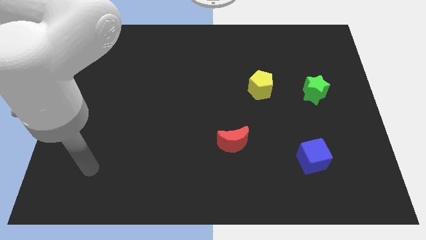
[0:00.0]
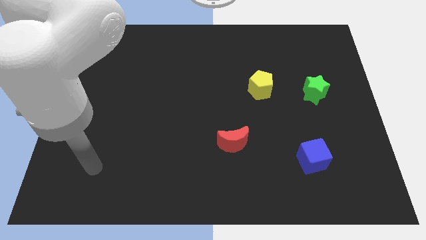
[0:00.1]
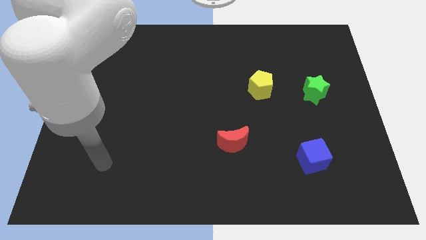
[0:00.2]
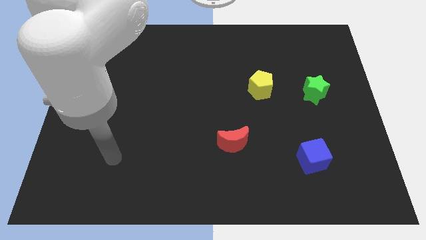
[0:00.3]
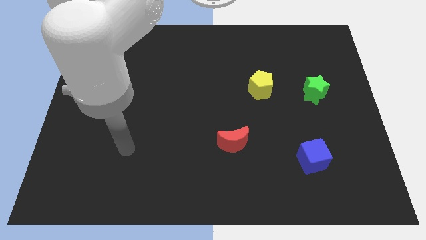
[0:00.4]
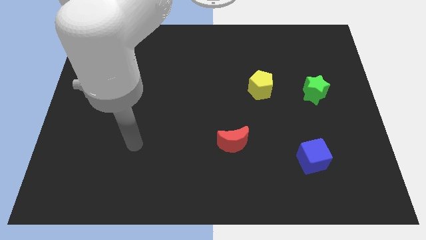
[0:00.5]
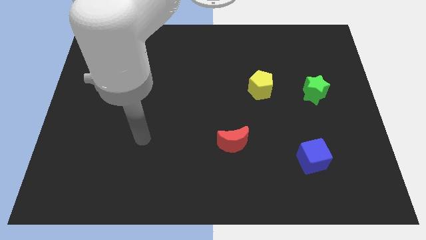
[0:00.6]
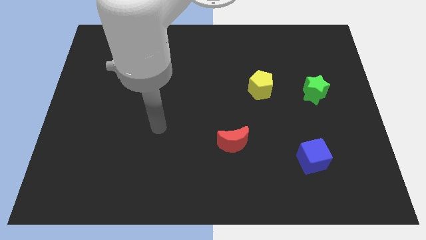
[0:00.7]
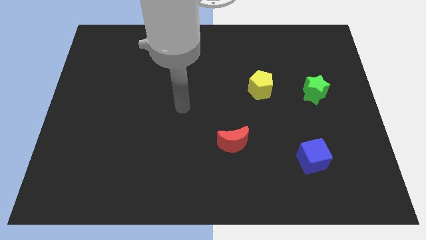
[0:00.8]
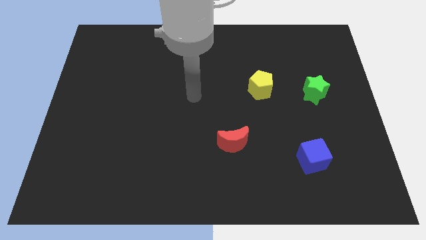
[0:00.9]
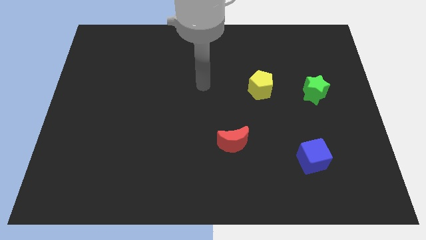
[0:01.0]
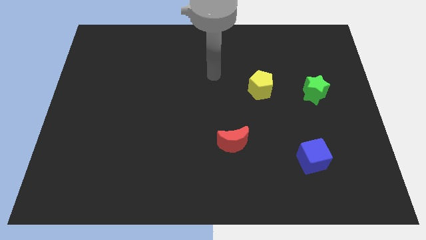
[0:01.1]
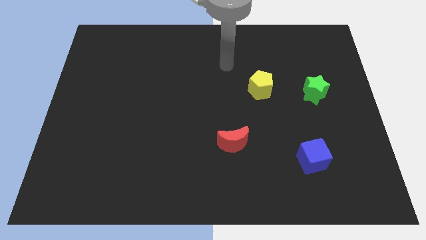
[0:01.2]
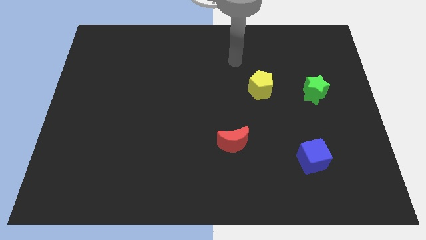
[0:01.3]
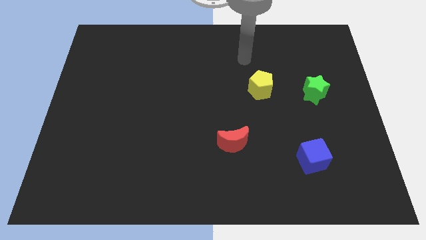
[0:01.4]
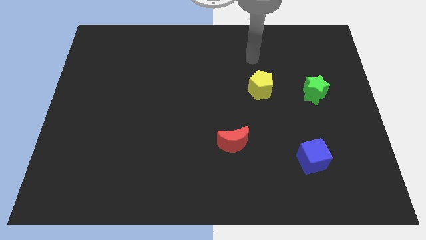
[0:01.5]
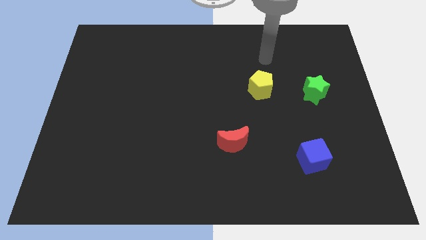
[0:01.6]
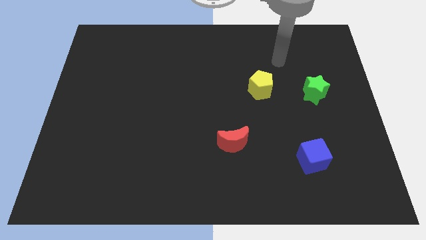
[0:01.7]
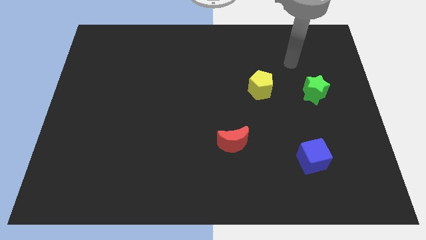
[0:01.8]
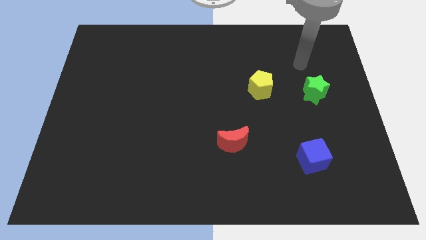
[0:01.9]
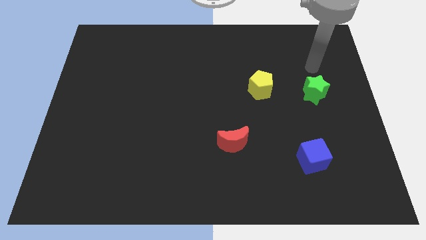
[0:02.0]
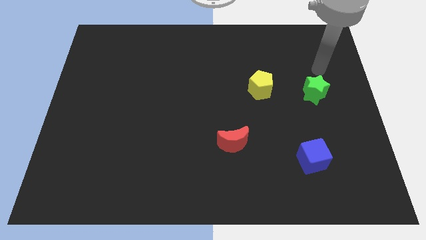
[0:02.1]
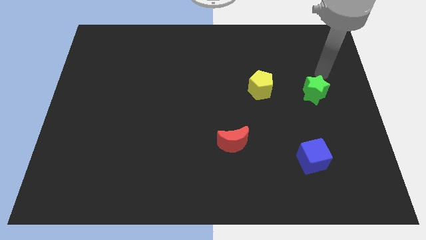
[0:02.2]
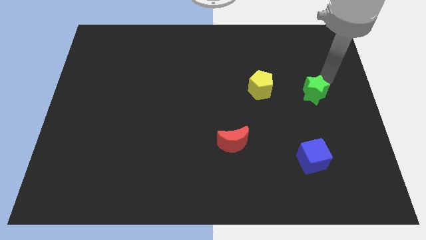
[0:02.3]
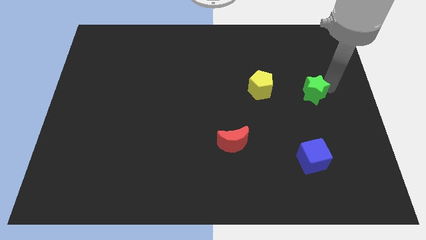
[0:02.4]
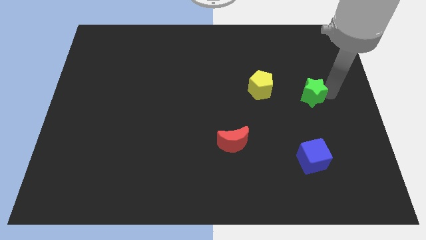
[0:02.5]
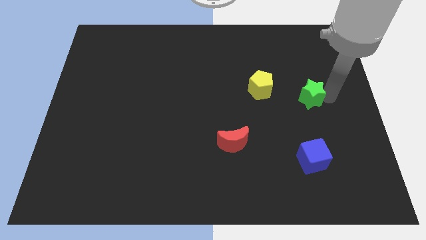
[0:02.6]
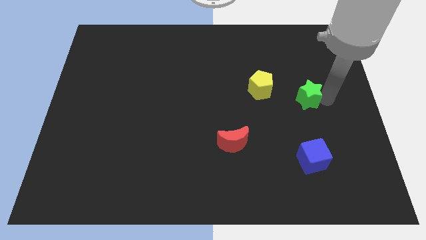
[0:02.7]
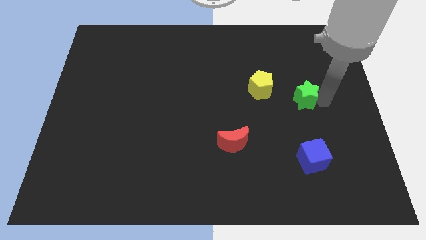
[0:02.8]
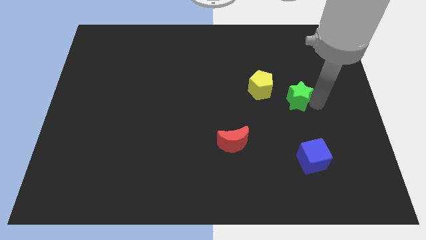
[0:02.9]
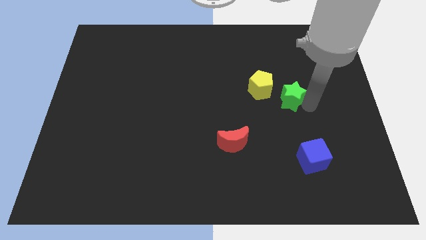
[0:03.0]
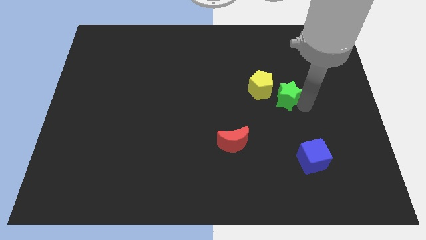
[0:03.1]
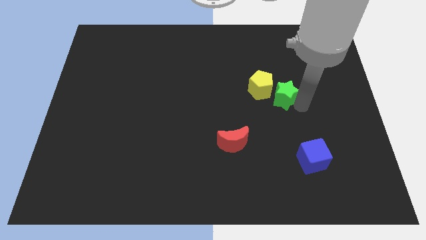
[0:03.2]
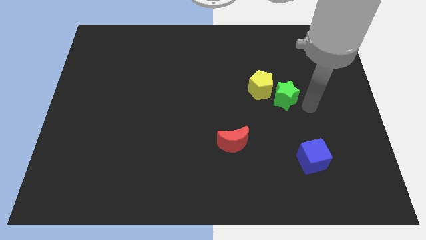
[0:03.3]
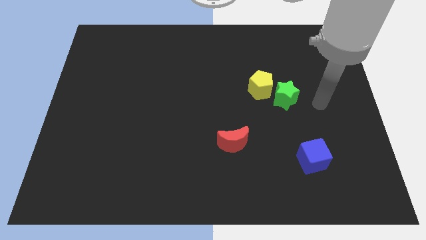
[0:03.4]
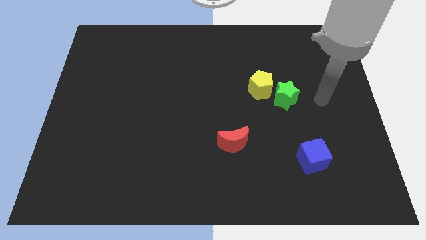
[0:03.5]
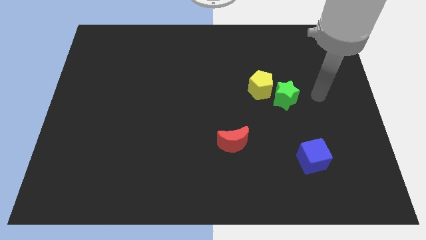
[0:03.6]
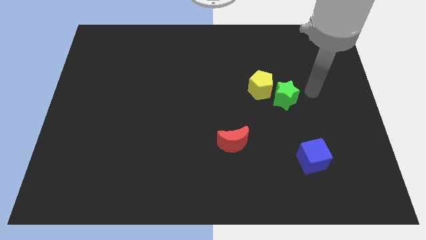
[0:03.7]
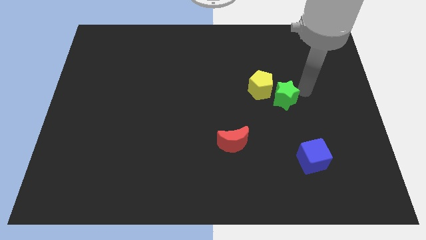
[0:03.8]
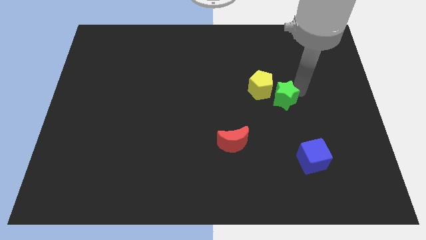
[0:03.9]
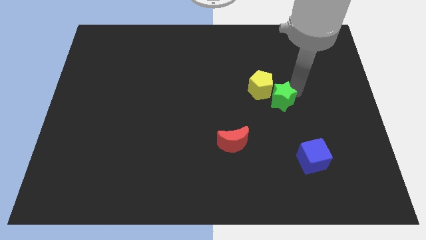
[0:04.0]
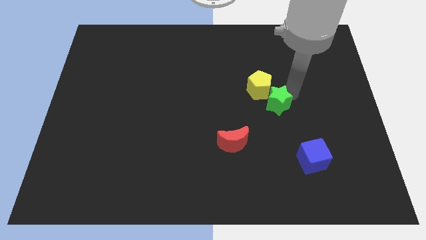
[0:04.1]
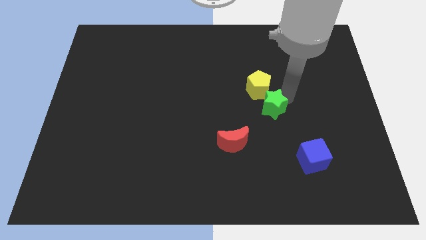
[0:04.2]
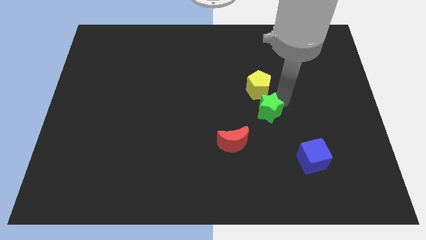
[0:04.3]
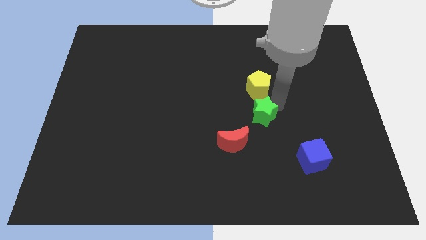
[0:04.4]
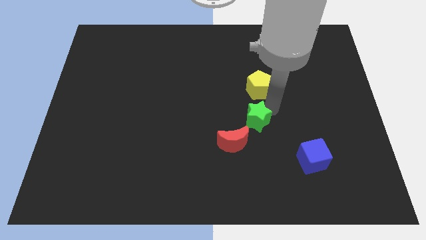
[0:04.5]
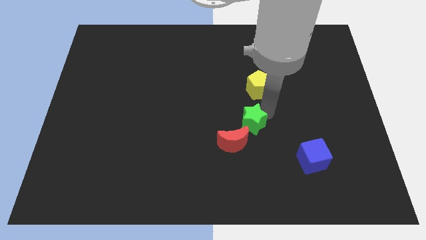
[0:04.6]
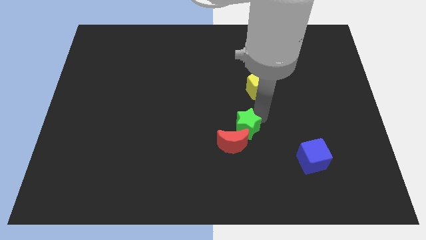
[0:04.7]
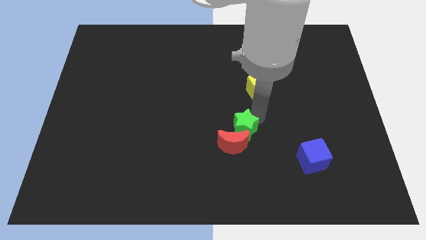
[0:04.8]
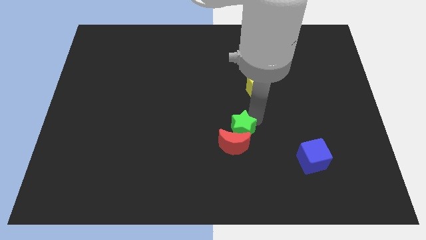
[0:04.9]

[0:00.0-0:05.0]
move the green block towards the moon

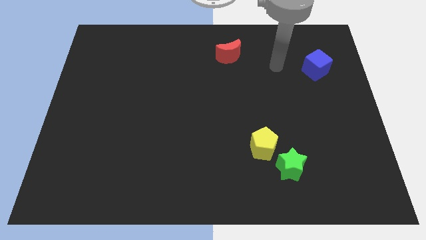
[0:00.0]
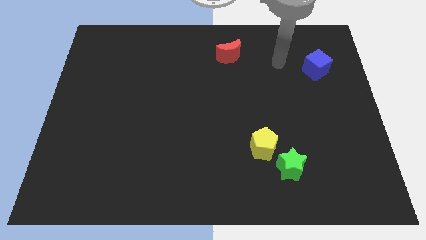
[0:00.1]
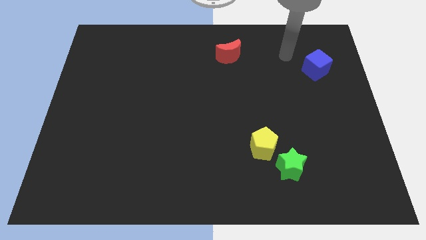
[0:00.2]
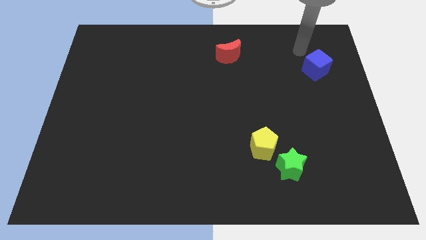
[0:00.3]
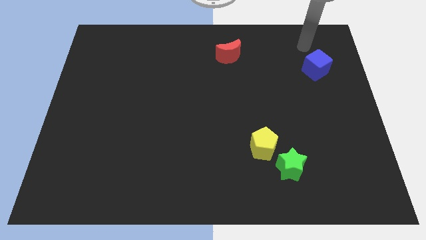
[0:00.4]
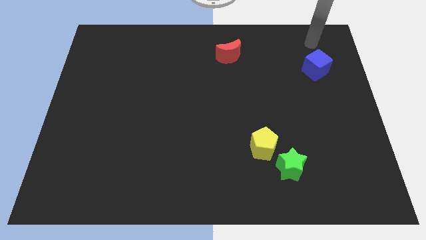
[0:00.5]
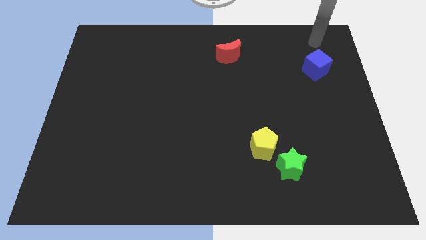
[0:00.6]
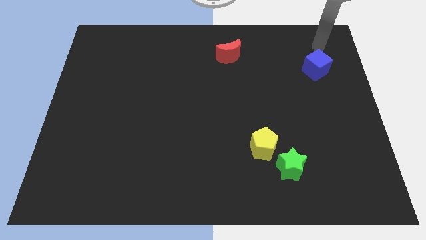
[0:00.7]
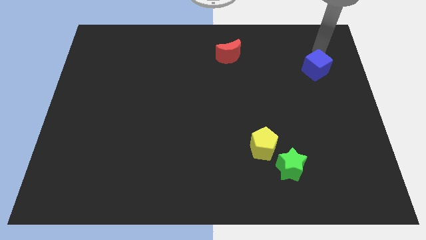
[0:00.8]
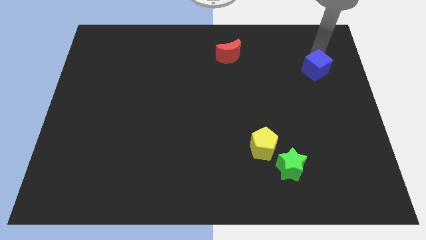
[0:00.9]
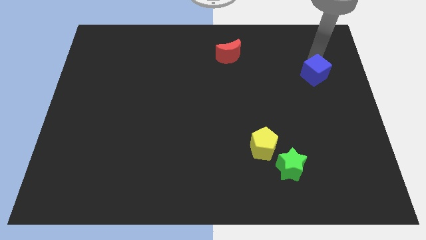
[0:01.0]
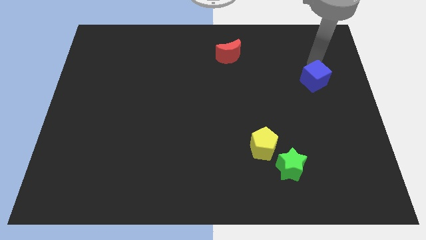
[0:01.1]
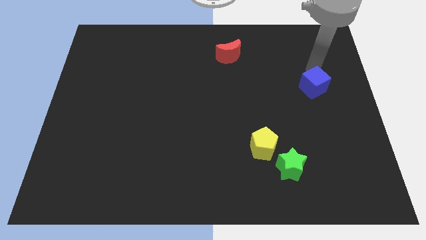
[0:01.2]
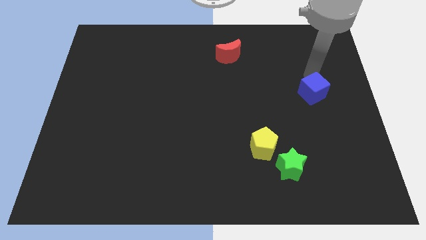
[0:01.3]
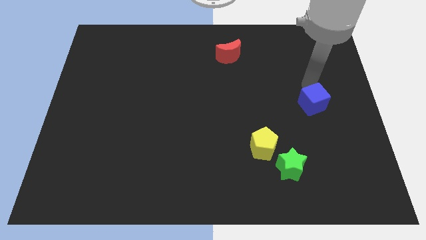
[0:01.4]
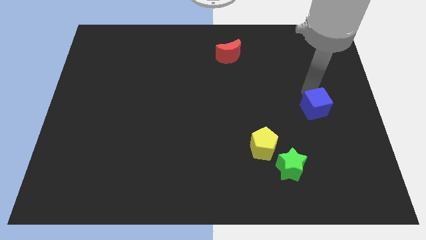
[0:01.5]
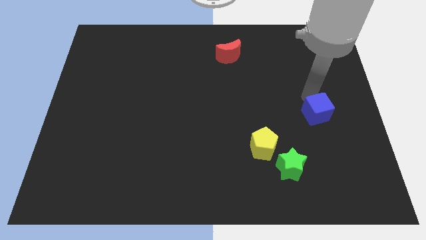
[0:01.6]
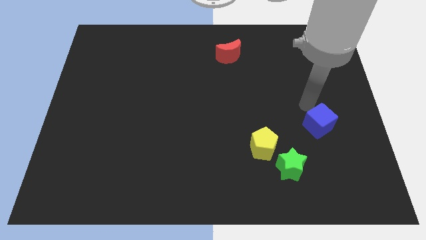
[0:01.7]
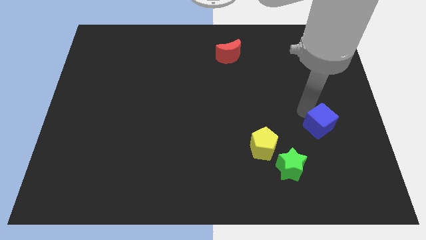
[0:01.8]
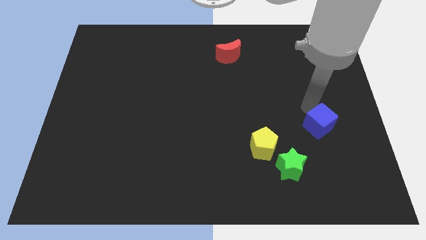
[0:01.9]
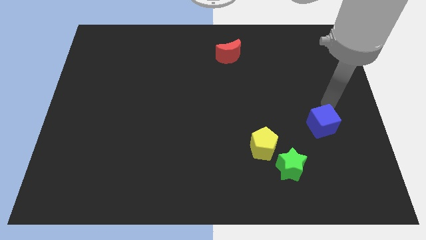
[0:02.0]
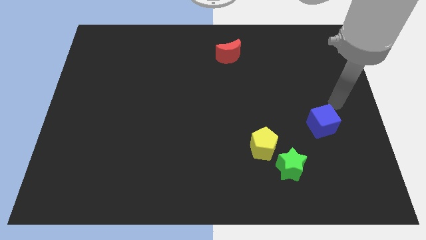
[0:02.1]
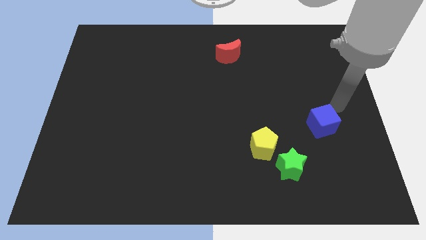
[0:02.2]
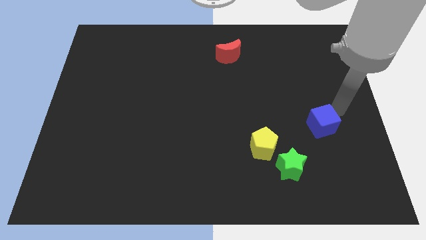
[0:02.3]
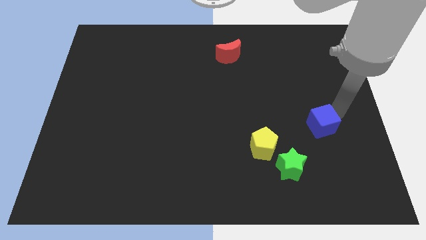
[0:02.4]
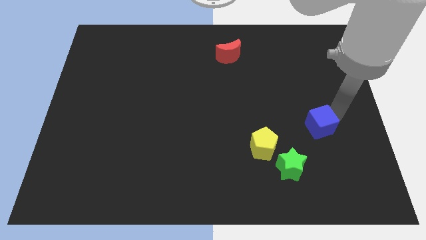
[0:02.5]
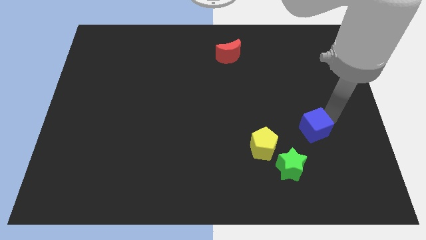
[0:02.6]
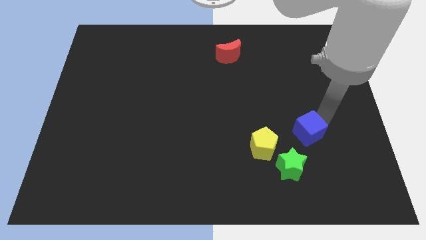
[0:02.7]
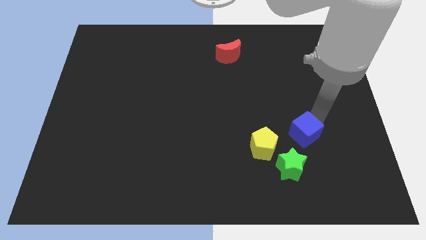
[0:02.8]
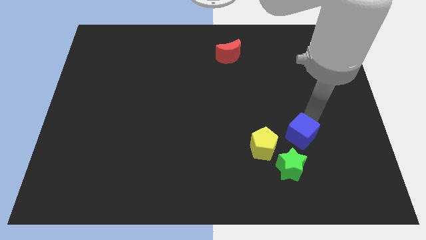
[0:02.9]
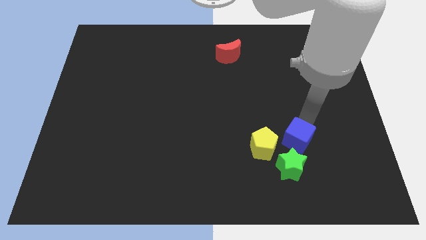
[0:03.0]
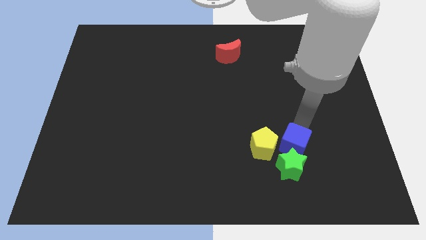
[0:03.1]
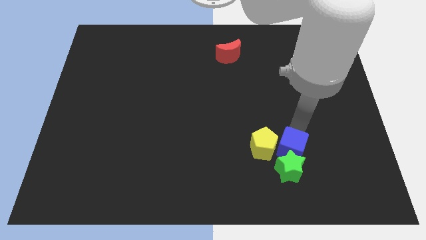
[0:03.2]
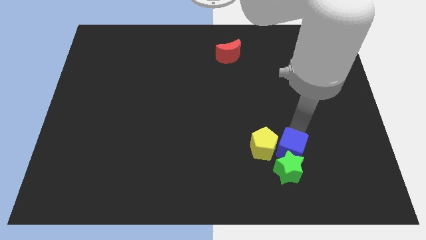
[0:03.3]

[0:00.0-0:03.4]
move the cube towards the star

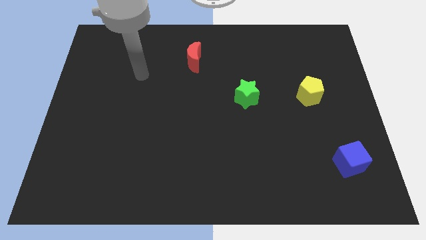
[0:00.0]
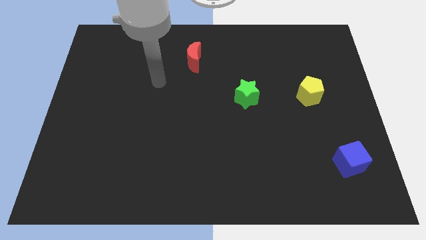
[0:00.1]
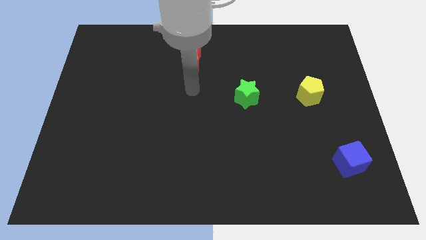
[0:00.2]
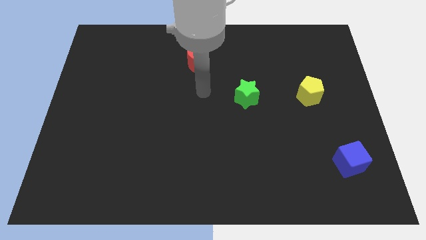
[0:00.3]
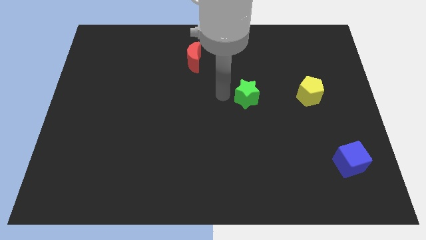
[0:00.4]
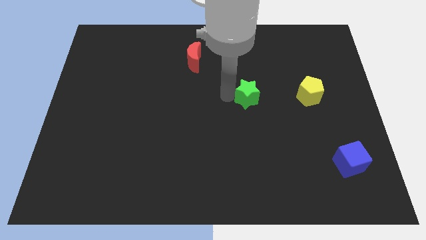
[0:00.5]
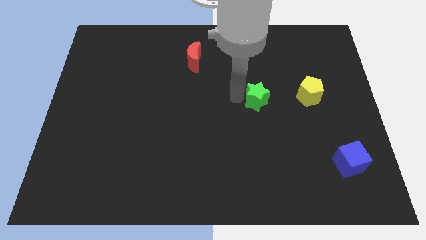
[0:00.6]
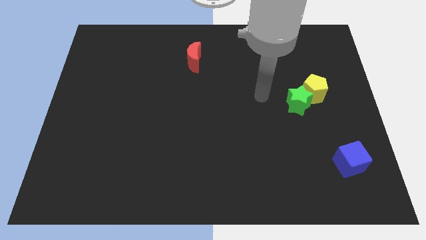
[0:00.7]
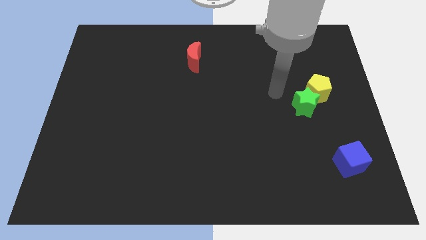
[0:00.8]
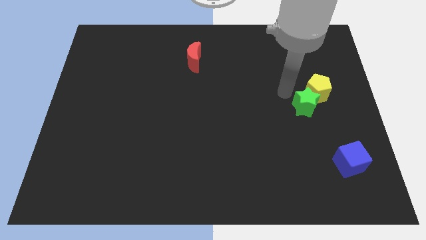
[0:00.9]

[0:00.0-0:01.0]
push the star next to the yellow pentagon
